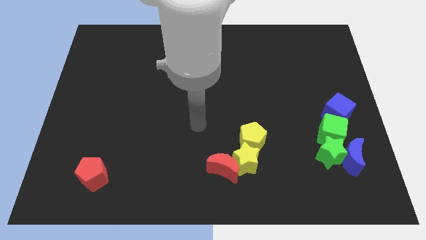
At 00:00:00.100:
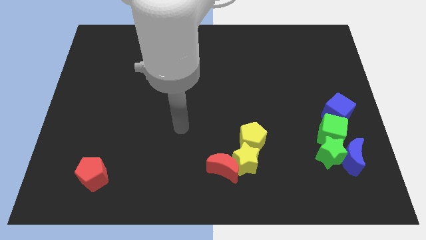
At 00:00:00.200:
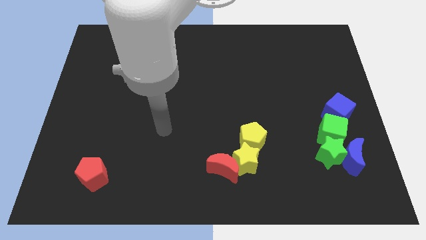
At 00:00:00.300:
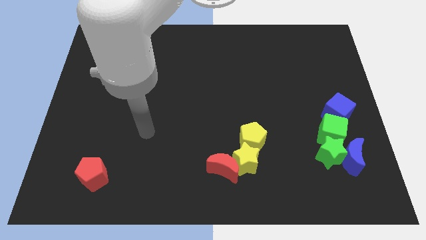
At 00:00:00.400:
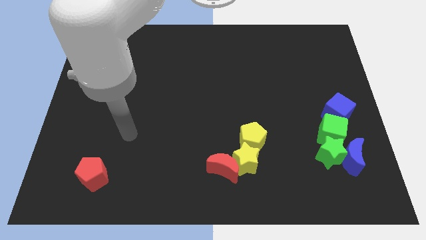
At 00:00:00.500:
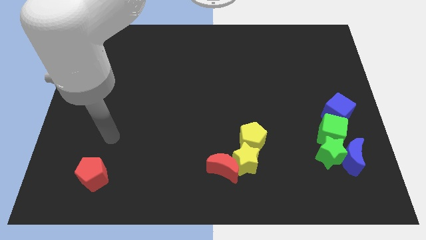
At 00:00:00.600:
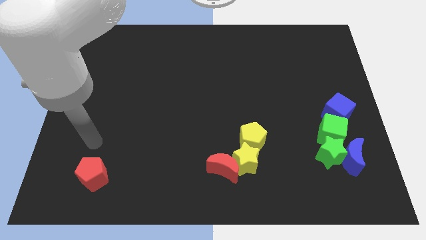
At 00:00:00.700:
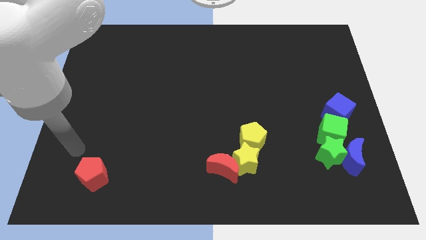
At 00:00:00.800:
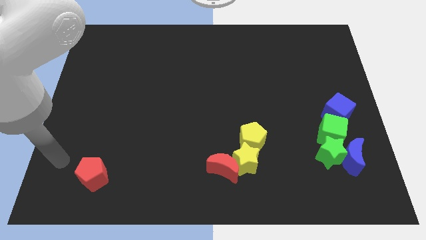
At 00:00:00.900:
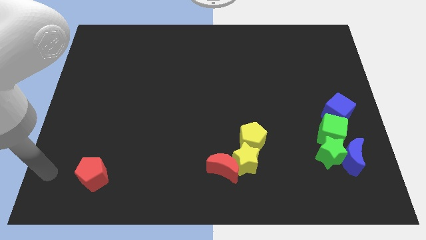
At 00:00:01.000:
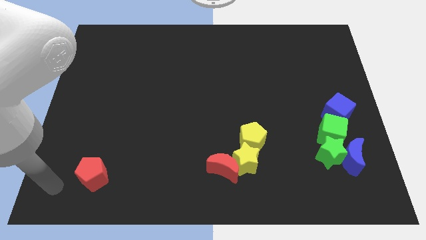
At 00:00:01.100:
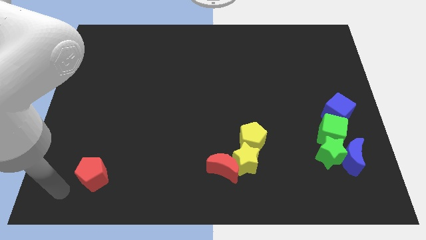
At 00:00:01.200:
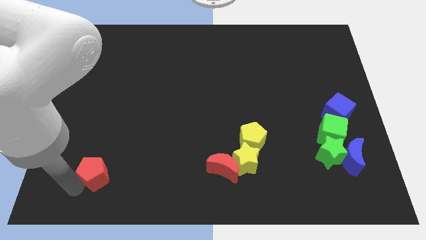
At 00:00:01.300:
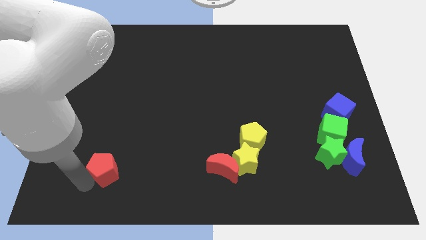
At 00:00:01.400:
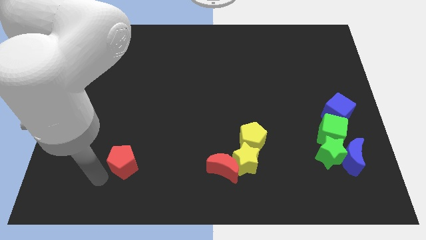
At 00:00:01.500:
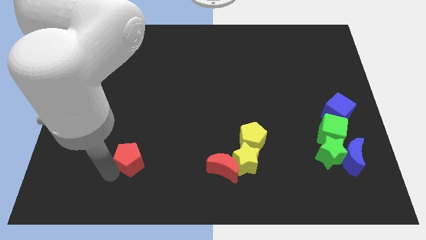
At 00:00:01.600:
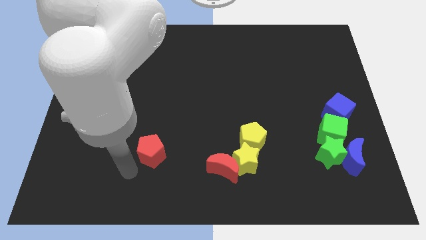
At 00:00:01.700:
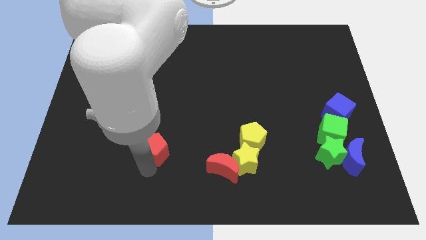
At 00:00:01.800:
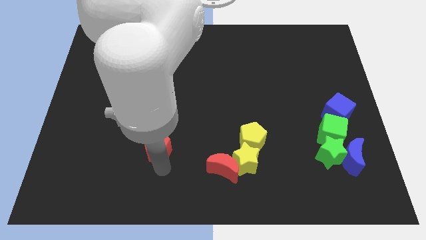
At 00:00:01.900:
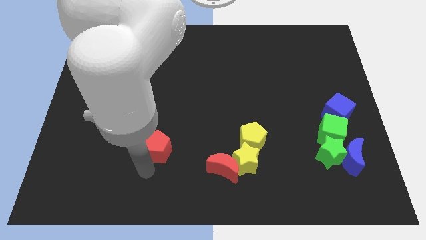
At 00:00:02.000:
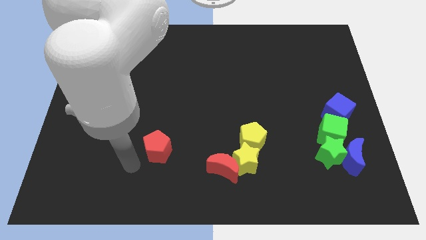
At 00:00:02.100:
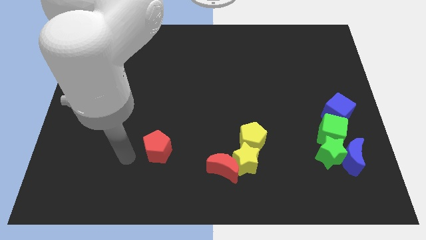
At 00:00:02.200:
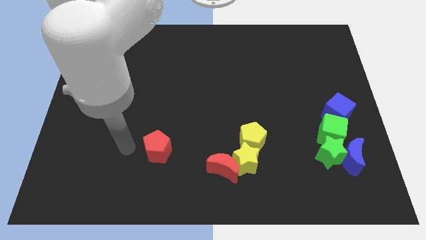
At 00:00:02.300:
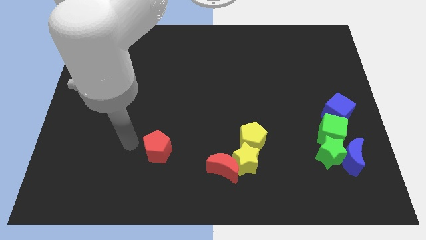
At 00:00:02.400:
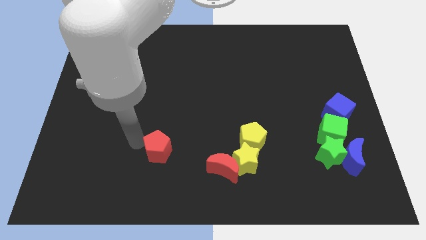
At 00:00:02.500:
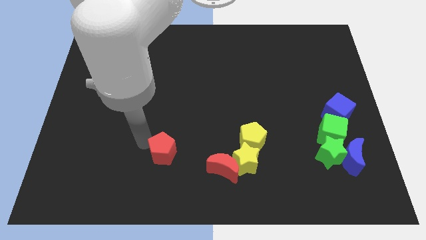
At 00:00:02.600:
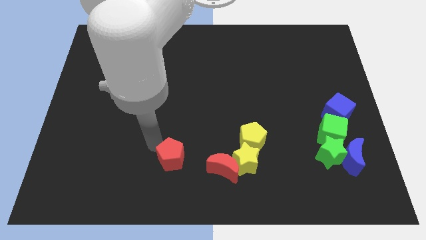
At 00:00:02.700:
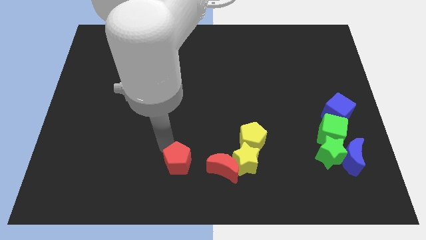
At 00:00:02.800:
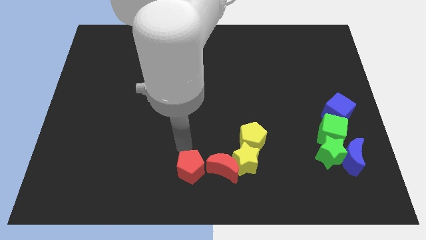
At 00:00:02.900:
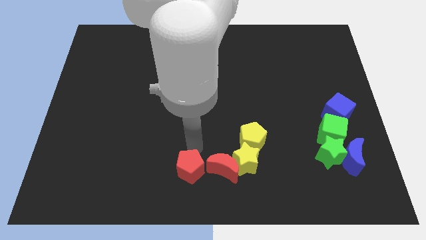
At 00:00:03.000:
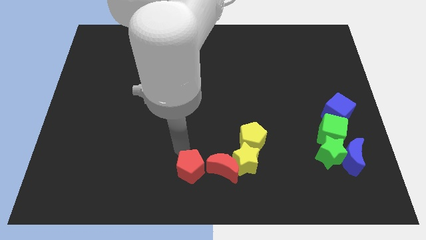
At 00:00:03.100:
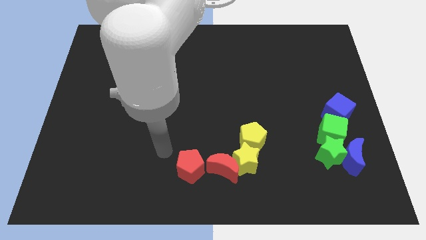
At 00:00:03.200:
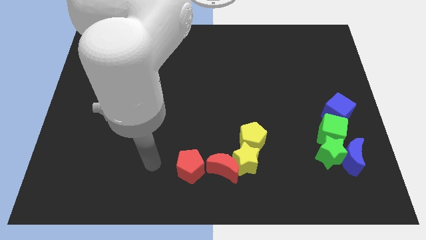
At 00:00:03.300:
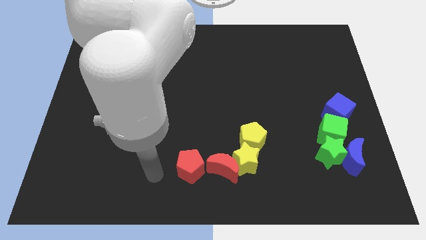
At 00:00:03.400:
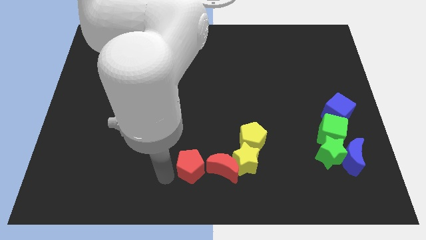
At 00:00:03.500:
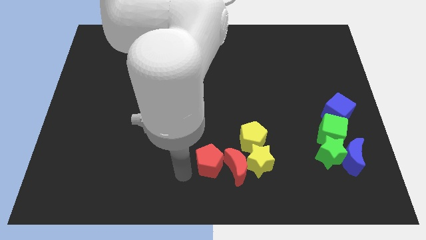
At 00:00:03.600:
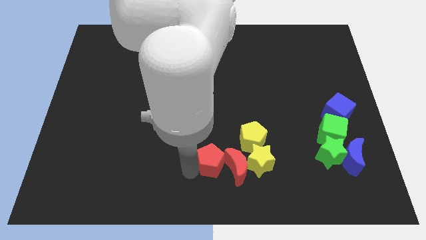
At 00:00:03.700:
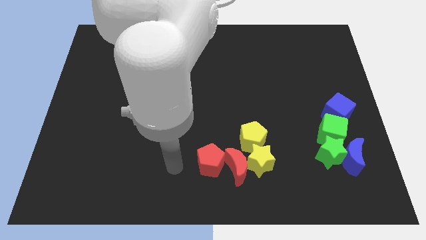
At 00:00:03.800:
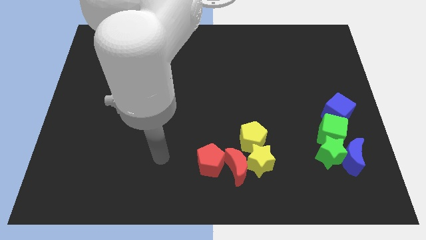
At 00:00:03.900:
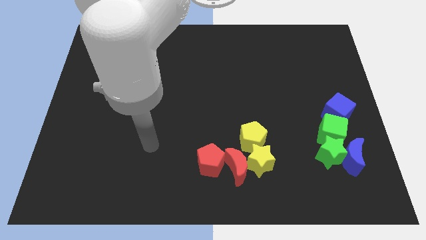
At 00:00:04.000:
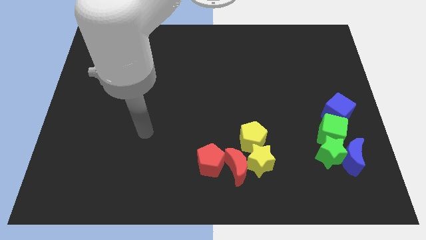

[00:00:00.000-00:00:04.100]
push the red pentagon into red moon

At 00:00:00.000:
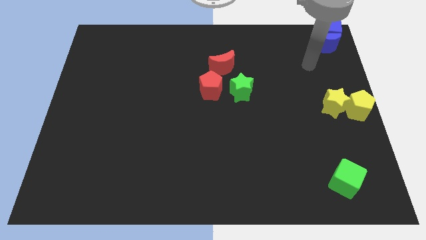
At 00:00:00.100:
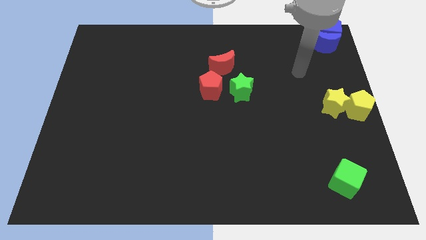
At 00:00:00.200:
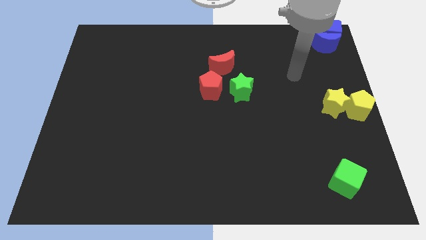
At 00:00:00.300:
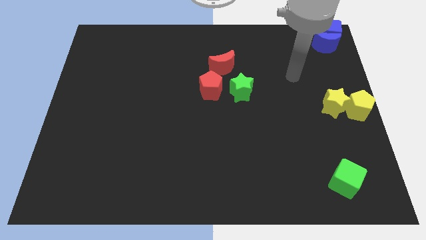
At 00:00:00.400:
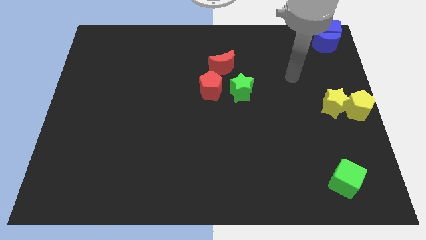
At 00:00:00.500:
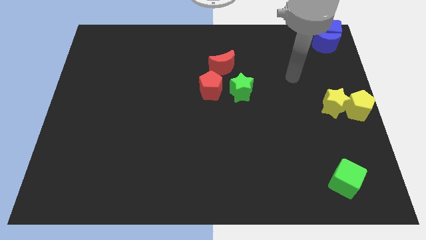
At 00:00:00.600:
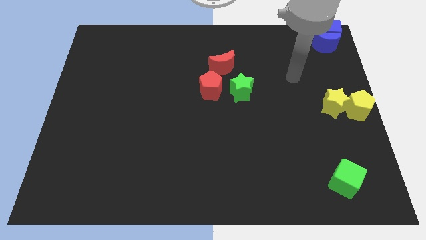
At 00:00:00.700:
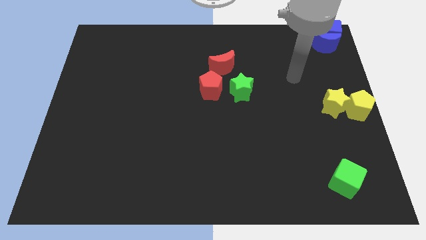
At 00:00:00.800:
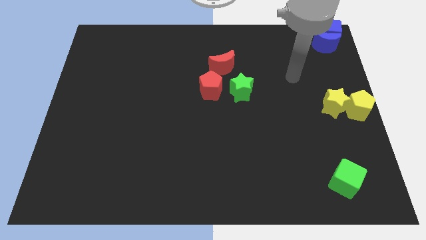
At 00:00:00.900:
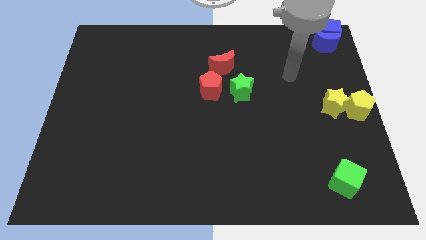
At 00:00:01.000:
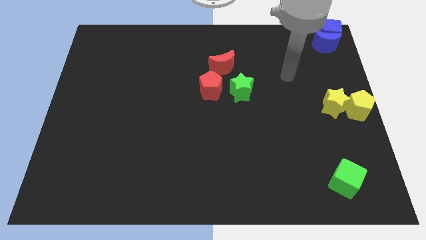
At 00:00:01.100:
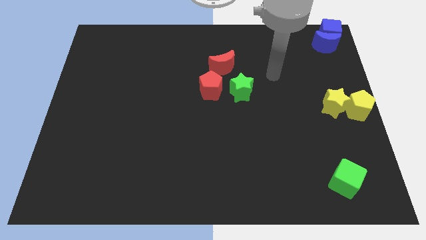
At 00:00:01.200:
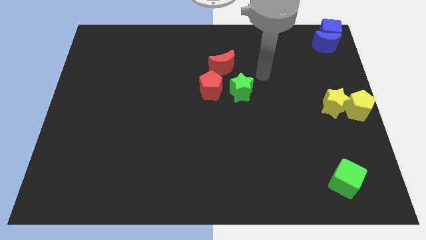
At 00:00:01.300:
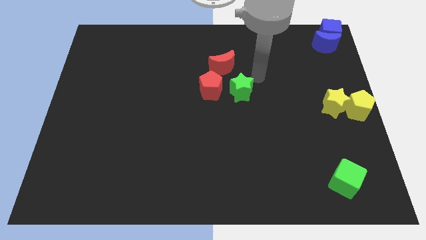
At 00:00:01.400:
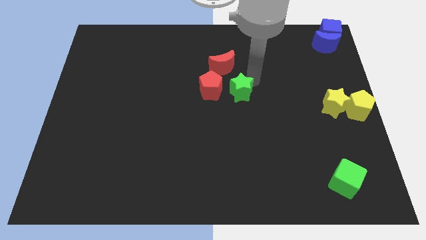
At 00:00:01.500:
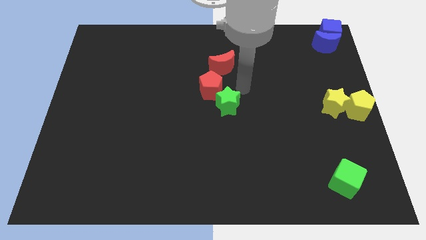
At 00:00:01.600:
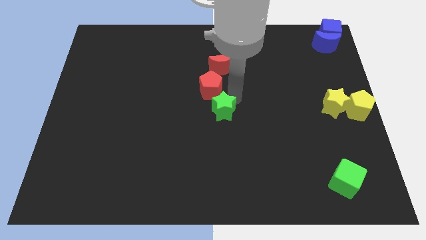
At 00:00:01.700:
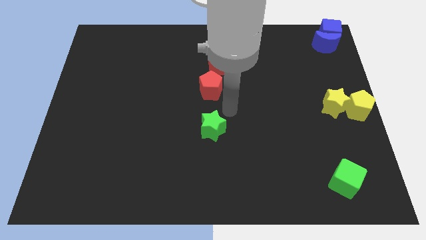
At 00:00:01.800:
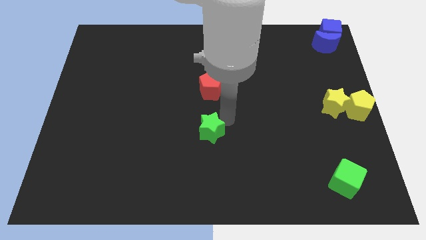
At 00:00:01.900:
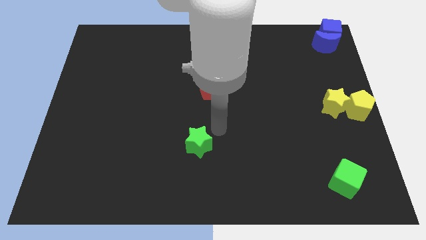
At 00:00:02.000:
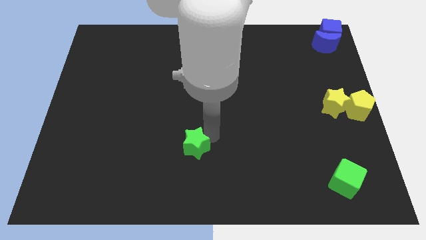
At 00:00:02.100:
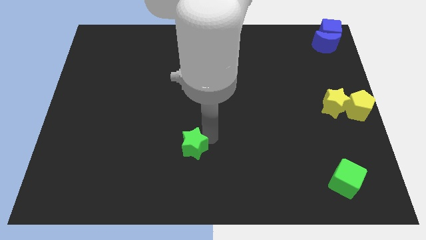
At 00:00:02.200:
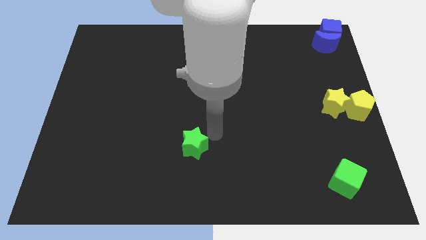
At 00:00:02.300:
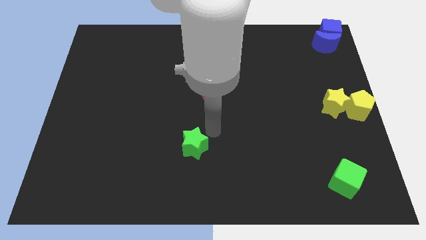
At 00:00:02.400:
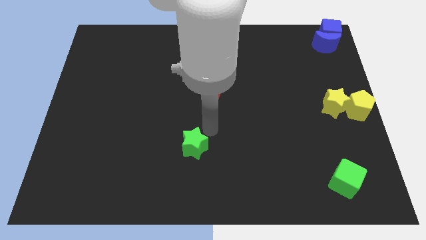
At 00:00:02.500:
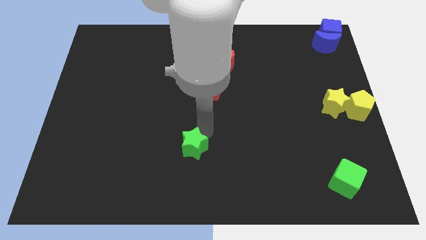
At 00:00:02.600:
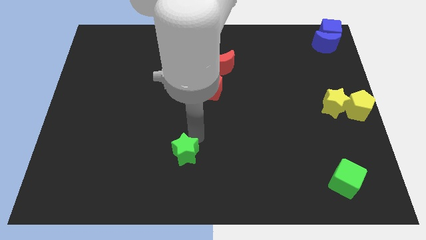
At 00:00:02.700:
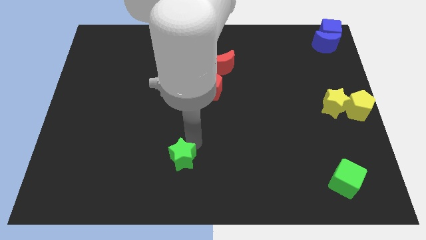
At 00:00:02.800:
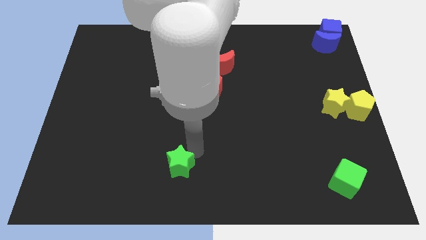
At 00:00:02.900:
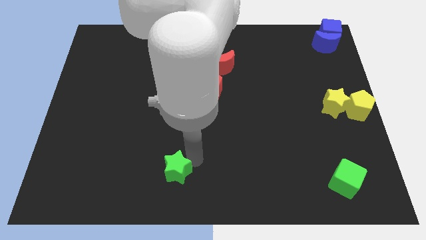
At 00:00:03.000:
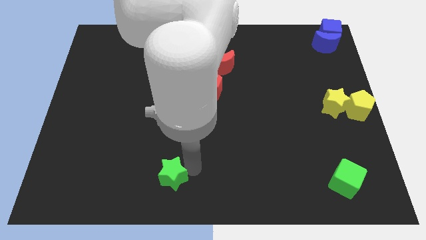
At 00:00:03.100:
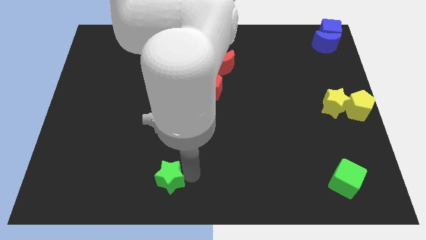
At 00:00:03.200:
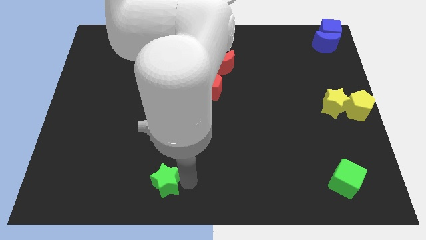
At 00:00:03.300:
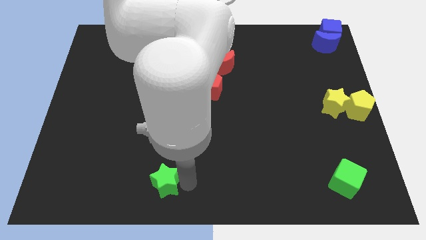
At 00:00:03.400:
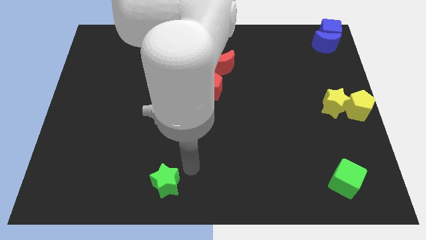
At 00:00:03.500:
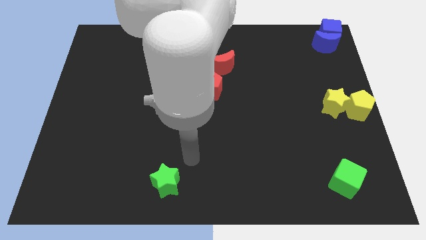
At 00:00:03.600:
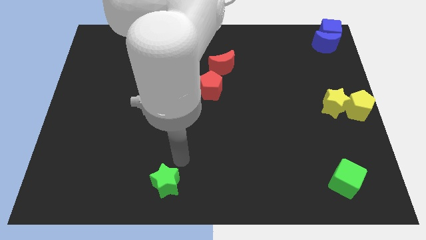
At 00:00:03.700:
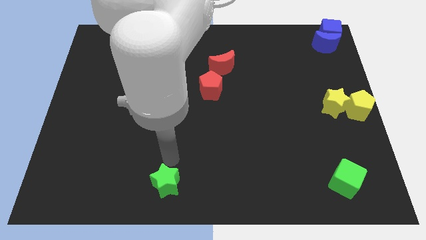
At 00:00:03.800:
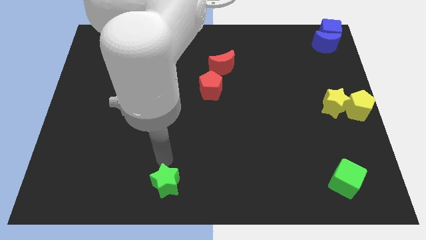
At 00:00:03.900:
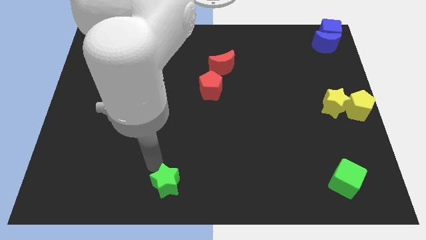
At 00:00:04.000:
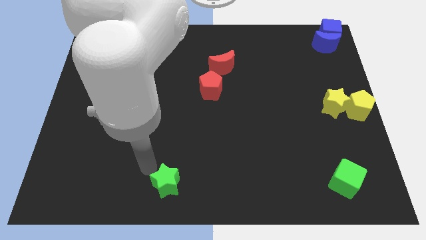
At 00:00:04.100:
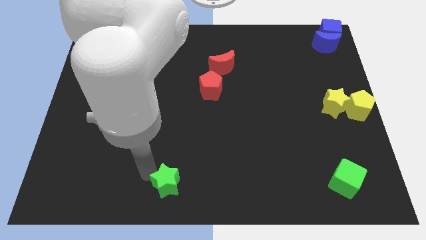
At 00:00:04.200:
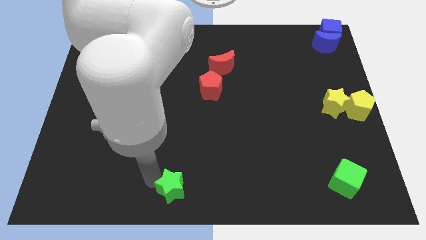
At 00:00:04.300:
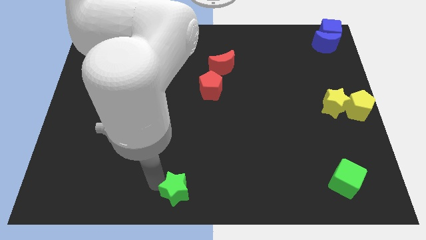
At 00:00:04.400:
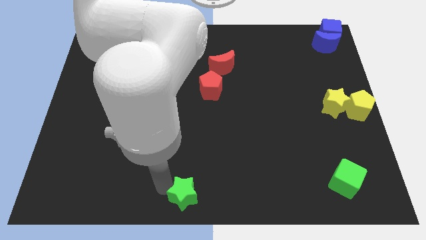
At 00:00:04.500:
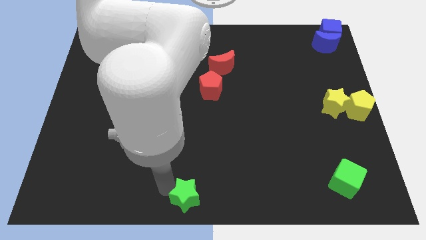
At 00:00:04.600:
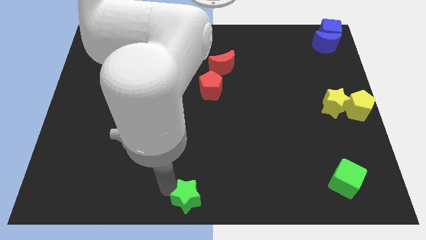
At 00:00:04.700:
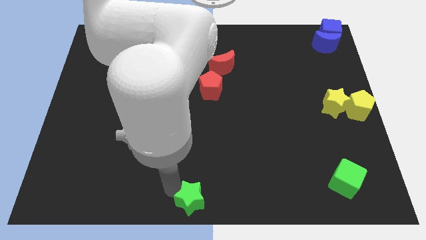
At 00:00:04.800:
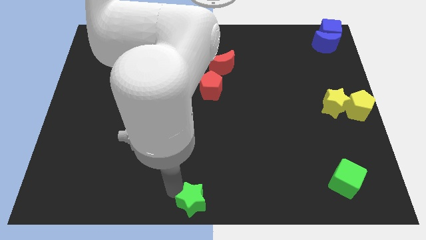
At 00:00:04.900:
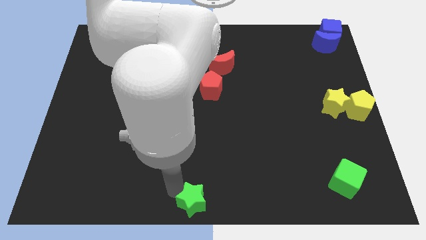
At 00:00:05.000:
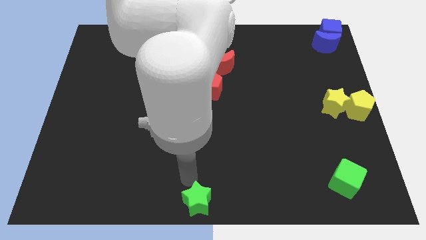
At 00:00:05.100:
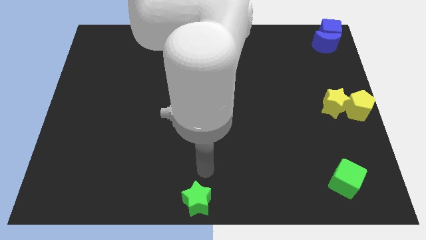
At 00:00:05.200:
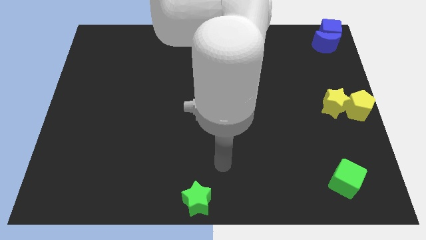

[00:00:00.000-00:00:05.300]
push the green star to the bottom center of the board
